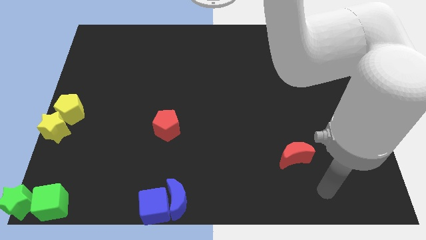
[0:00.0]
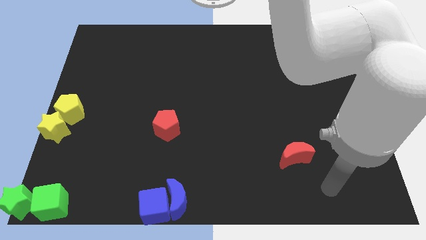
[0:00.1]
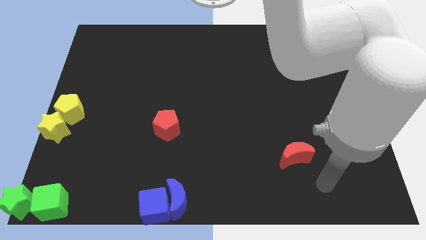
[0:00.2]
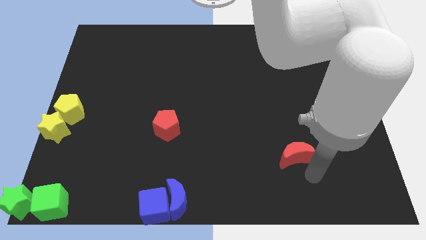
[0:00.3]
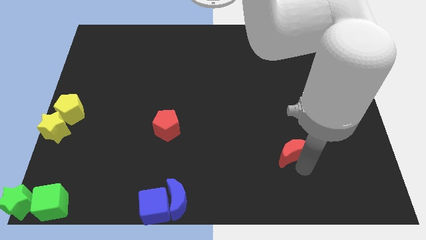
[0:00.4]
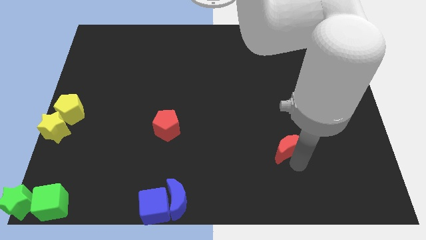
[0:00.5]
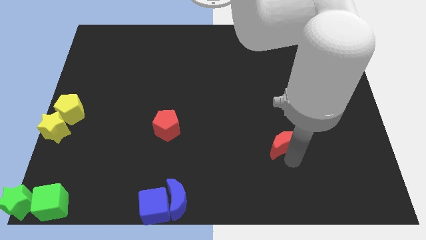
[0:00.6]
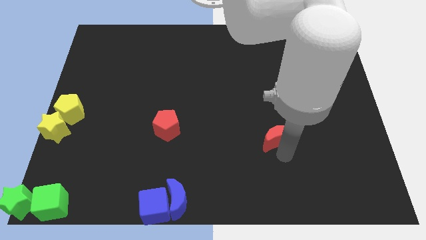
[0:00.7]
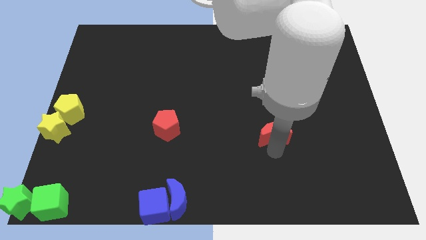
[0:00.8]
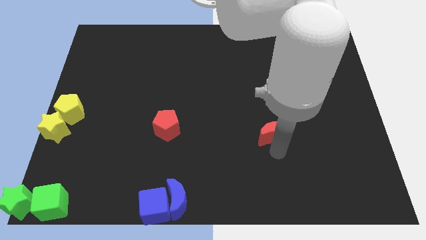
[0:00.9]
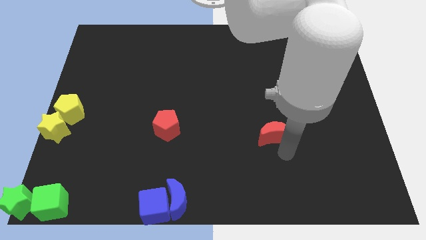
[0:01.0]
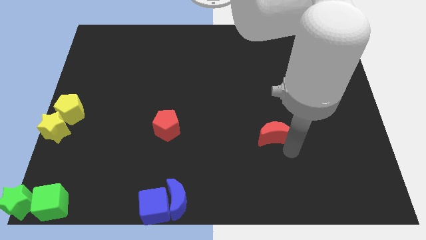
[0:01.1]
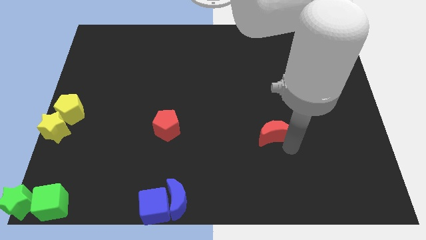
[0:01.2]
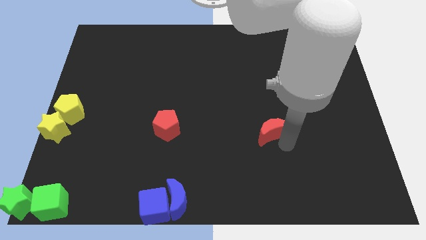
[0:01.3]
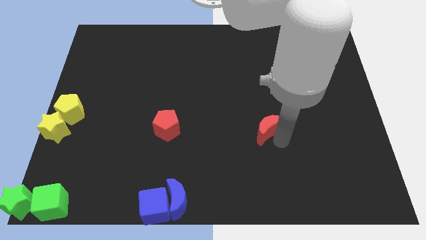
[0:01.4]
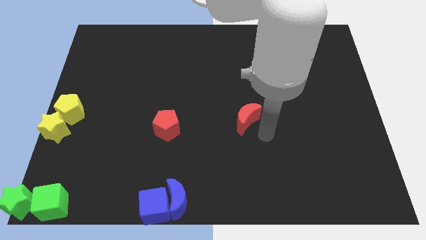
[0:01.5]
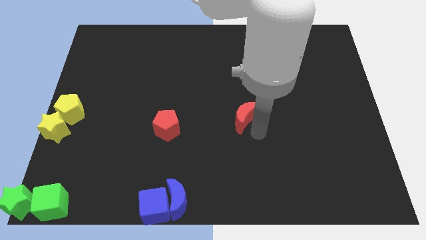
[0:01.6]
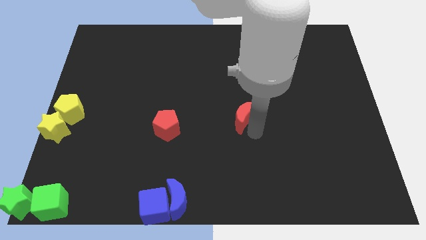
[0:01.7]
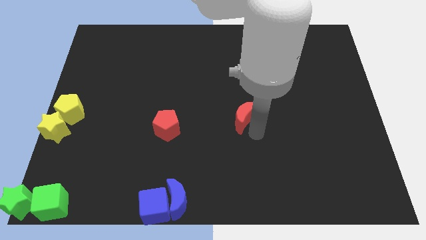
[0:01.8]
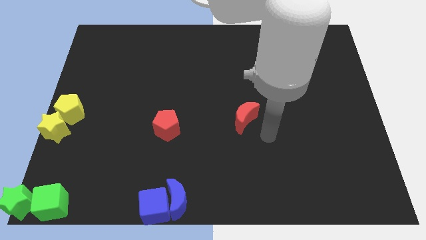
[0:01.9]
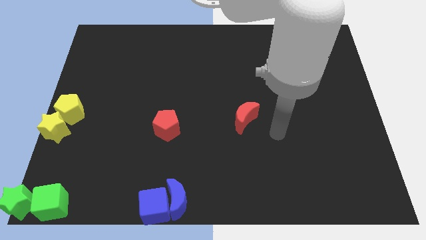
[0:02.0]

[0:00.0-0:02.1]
place the red crescent to the right of the red pentagon

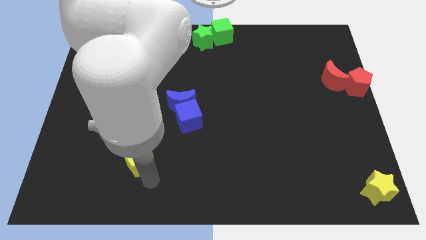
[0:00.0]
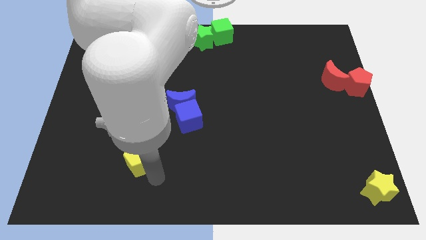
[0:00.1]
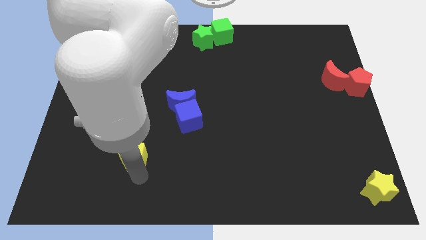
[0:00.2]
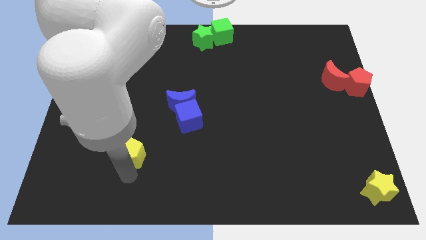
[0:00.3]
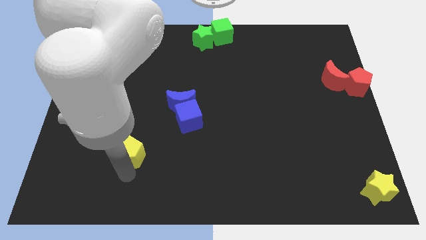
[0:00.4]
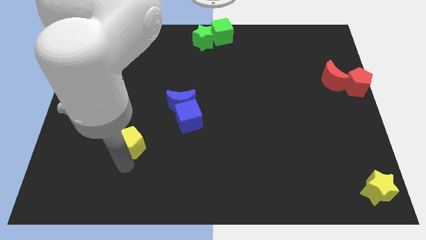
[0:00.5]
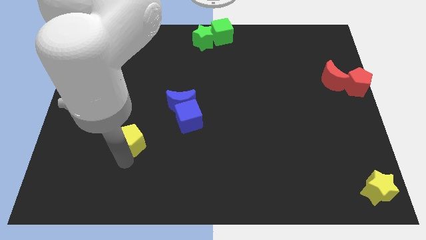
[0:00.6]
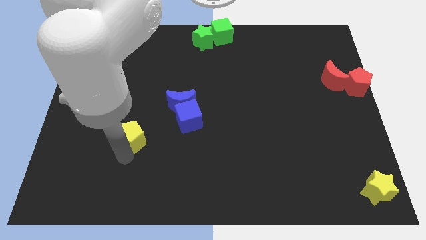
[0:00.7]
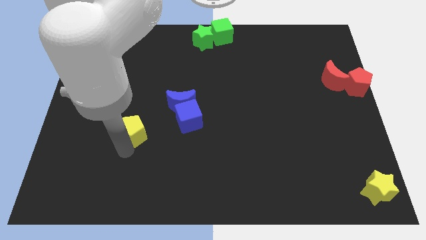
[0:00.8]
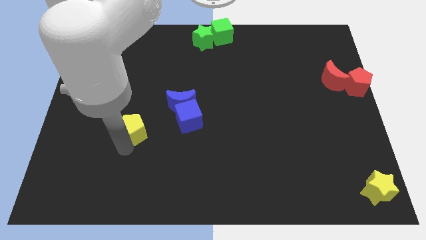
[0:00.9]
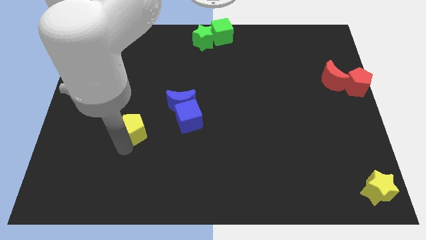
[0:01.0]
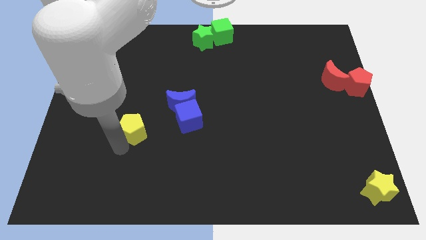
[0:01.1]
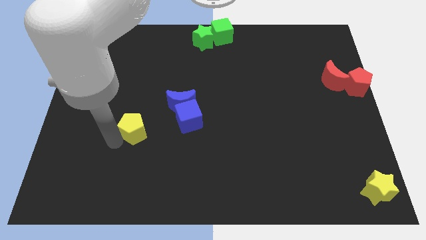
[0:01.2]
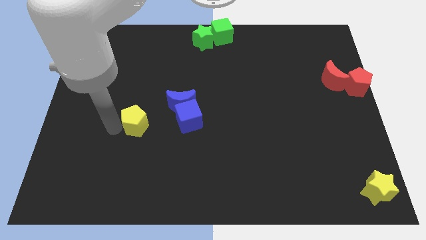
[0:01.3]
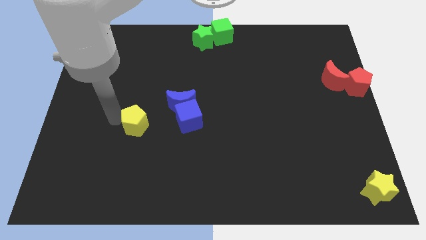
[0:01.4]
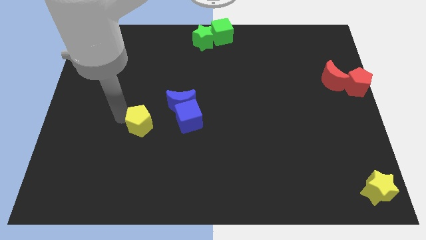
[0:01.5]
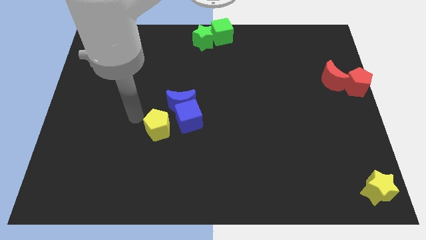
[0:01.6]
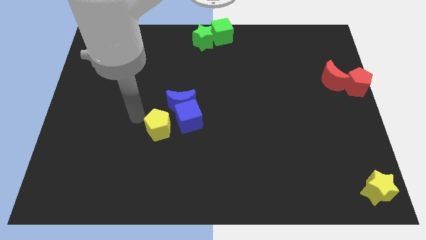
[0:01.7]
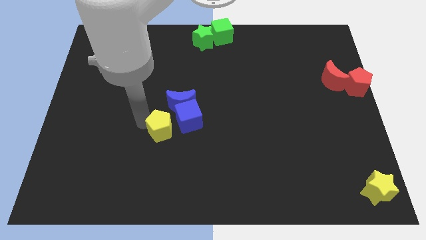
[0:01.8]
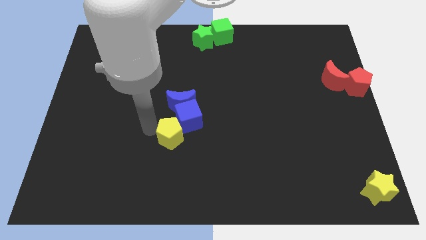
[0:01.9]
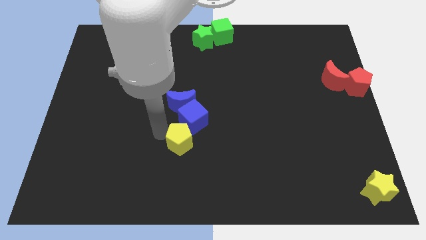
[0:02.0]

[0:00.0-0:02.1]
place the yellow pentagon into the blue cube

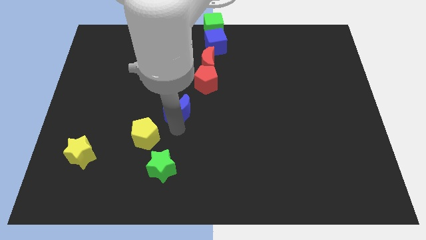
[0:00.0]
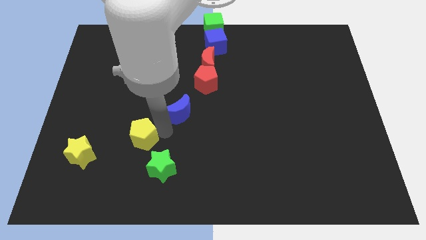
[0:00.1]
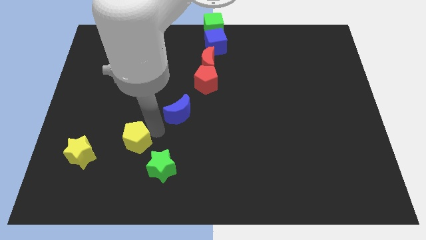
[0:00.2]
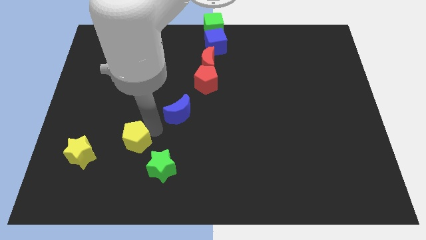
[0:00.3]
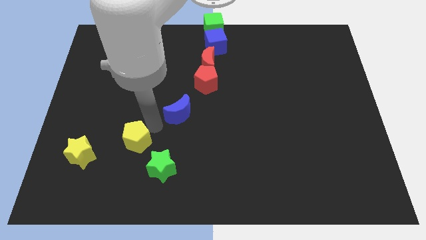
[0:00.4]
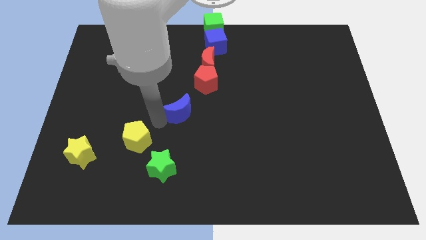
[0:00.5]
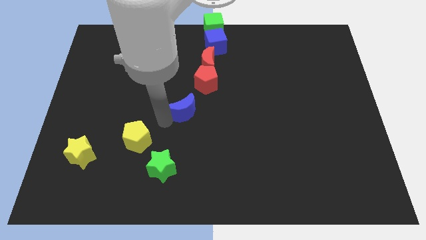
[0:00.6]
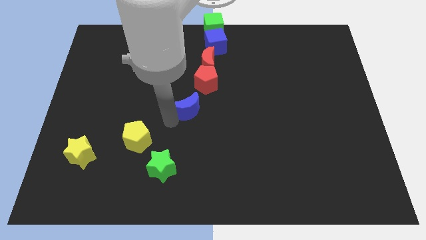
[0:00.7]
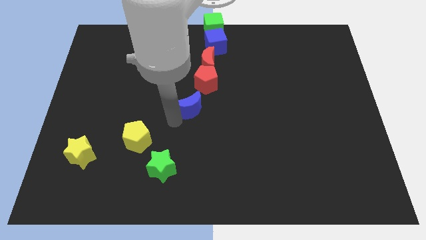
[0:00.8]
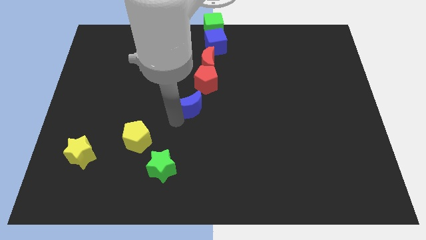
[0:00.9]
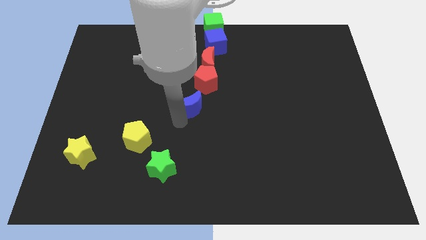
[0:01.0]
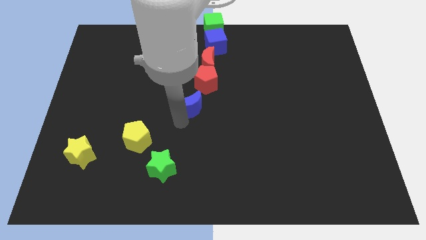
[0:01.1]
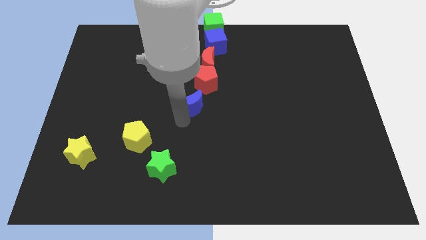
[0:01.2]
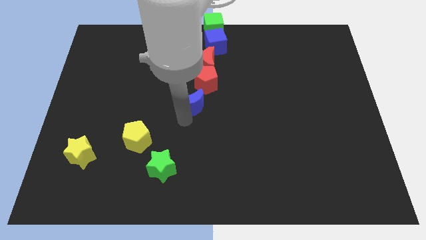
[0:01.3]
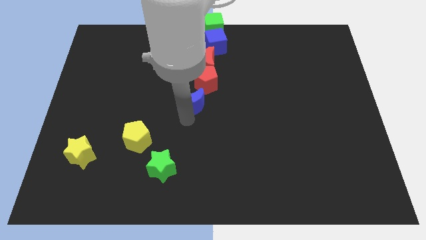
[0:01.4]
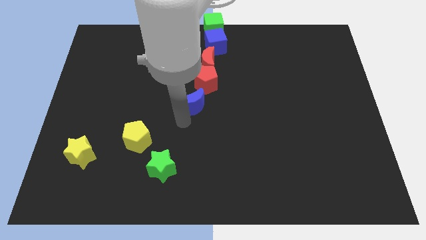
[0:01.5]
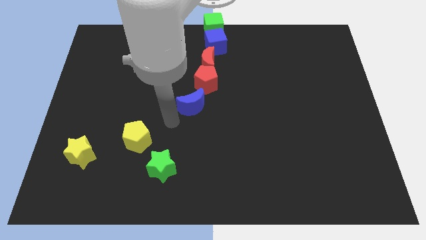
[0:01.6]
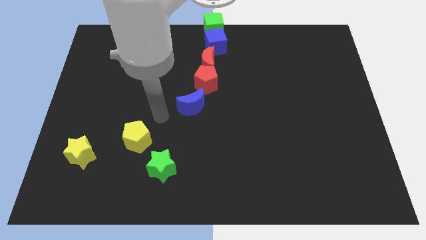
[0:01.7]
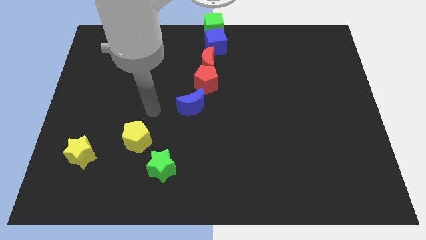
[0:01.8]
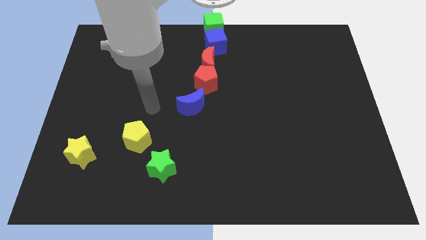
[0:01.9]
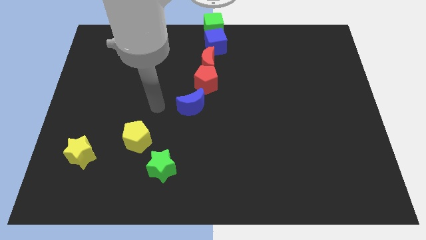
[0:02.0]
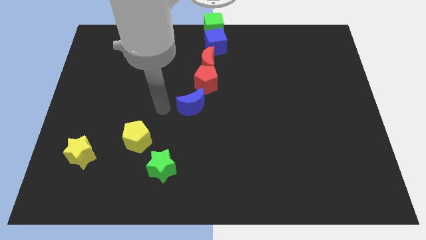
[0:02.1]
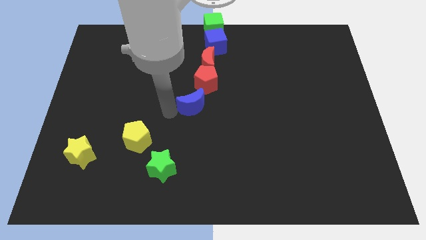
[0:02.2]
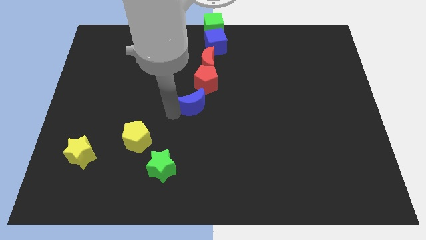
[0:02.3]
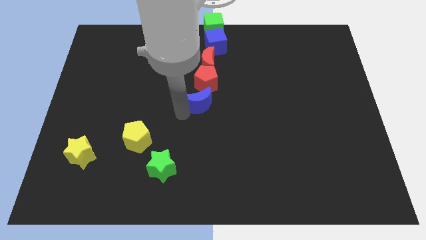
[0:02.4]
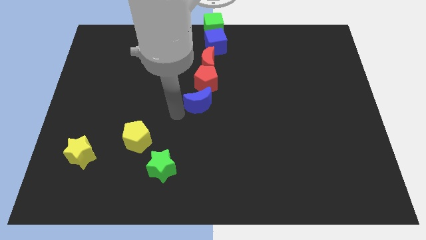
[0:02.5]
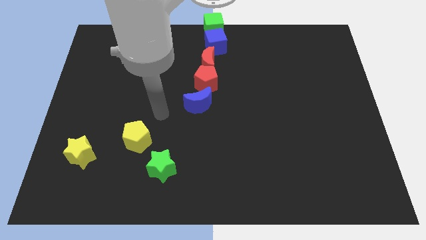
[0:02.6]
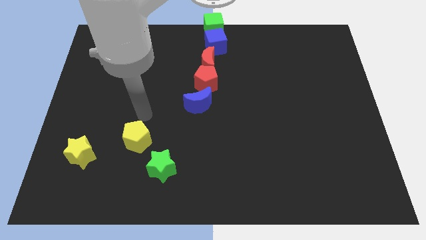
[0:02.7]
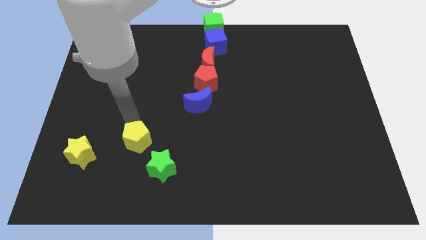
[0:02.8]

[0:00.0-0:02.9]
place the blue crescent into red pentagon

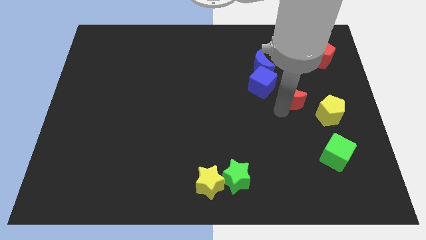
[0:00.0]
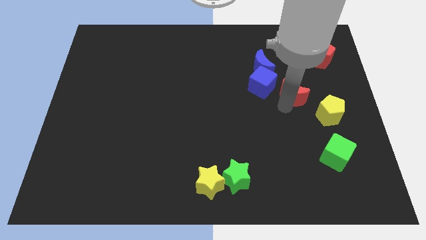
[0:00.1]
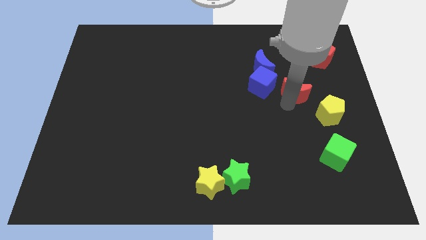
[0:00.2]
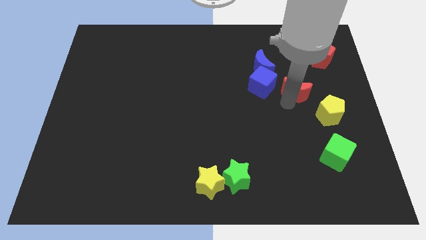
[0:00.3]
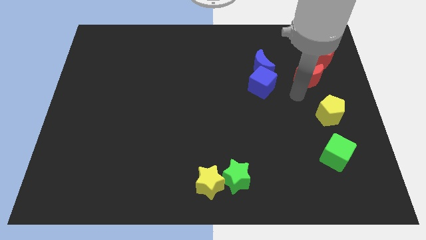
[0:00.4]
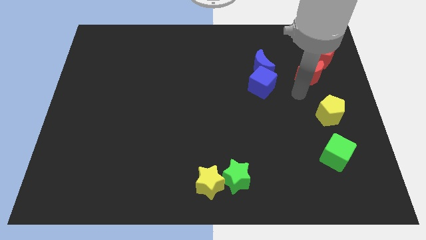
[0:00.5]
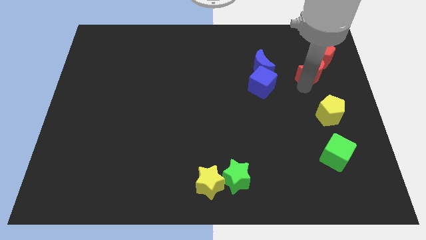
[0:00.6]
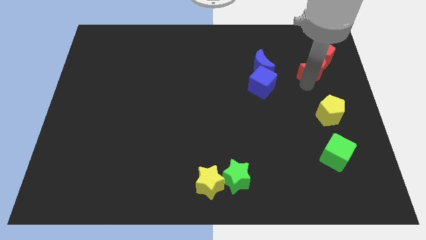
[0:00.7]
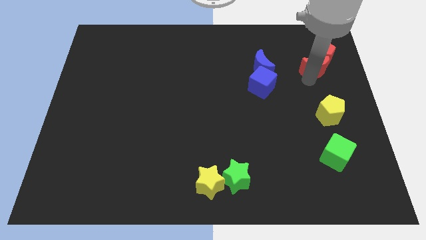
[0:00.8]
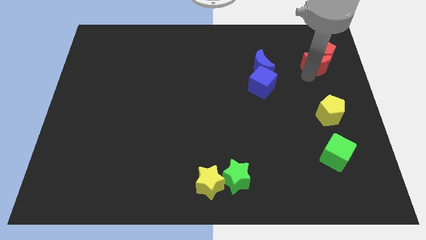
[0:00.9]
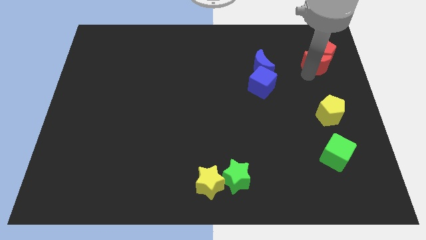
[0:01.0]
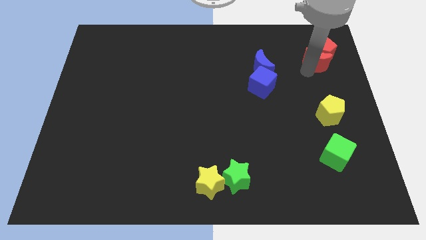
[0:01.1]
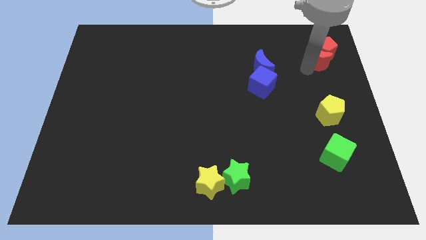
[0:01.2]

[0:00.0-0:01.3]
move the red moon into the bottom side of the red pentagon

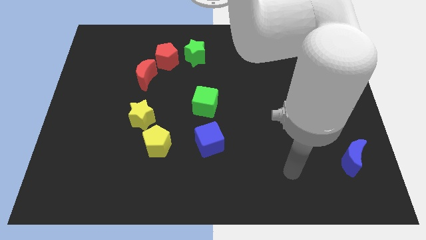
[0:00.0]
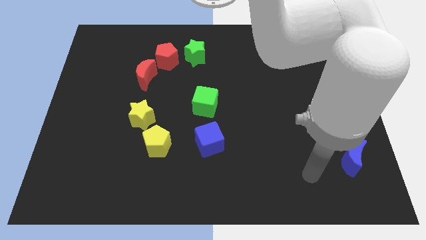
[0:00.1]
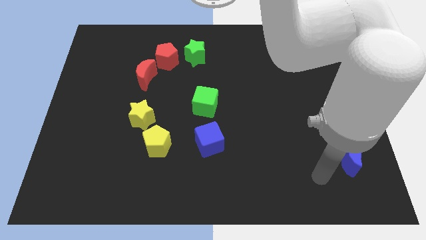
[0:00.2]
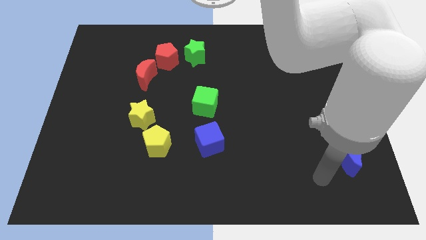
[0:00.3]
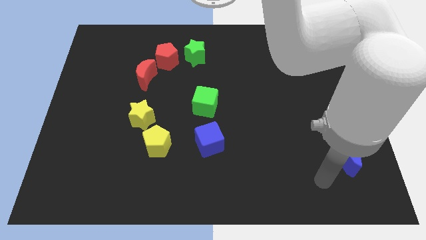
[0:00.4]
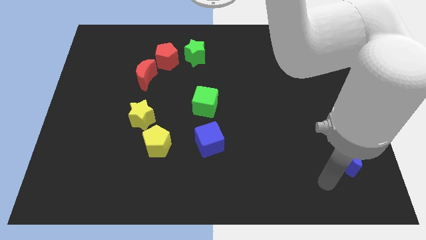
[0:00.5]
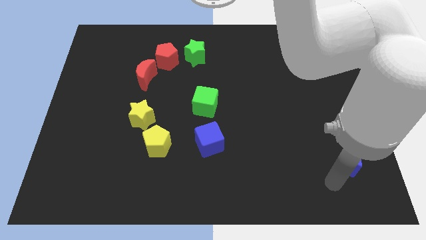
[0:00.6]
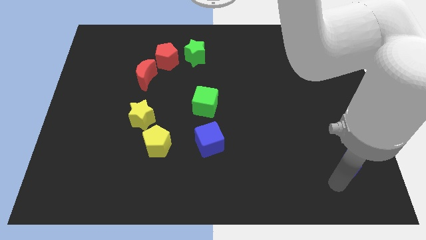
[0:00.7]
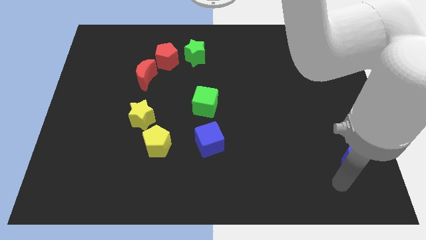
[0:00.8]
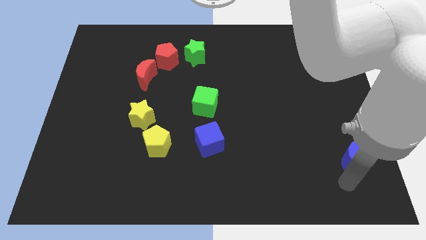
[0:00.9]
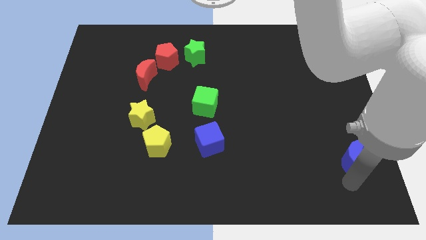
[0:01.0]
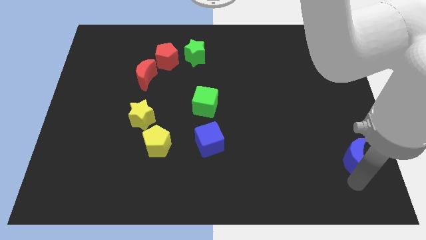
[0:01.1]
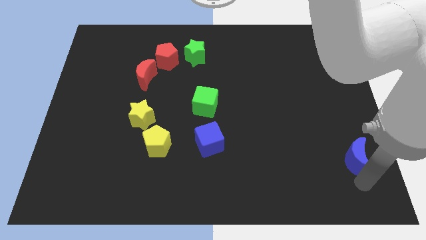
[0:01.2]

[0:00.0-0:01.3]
tap the bottom side of the blue crescent
